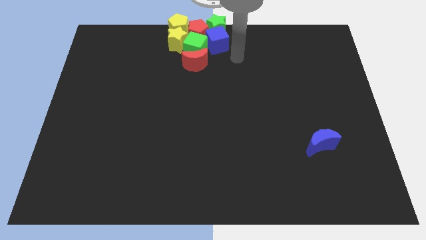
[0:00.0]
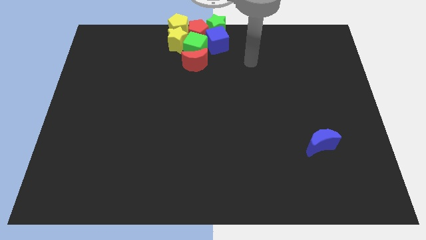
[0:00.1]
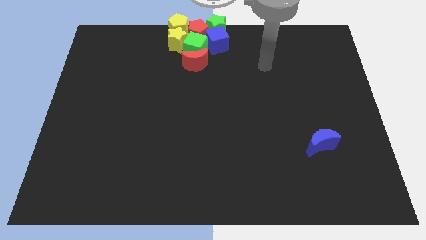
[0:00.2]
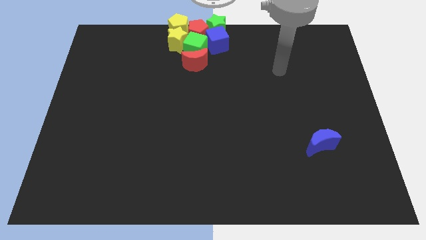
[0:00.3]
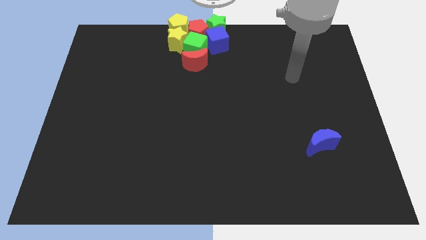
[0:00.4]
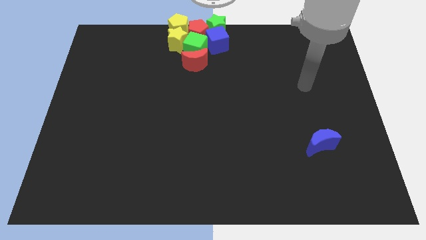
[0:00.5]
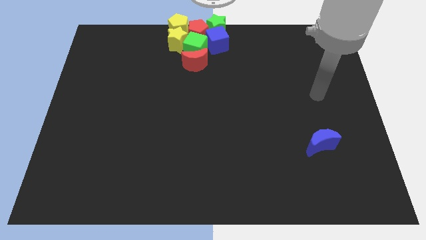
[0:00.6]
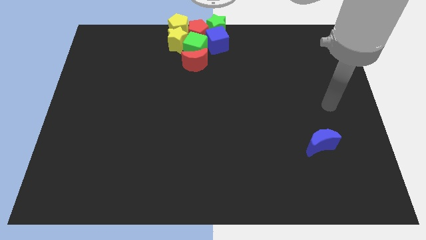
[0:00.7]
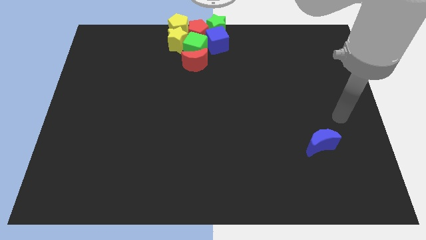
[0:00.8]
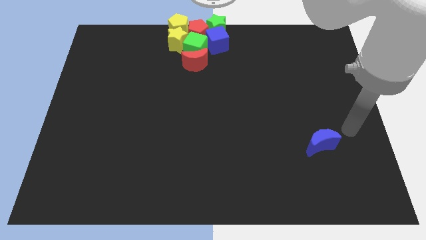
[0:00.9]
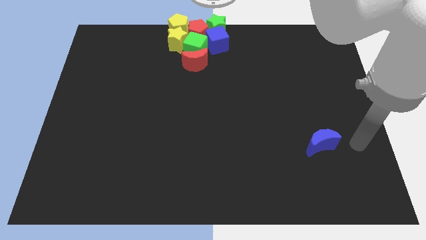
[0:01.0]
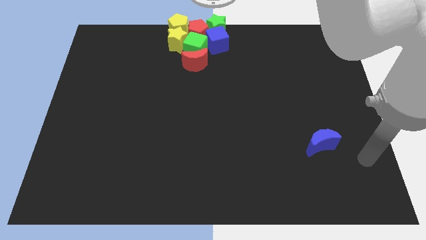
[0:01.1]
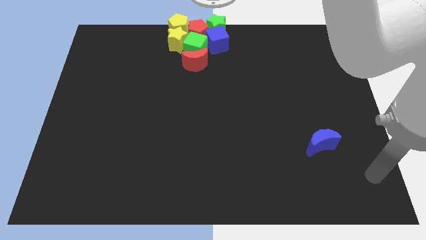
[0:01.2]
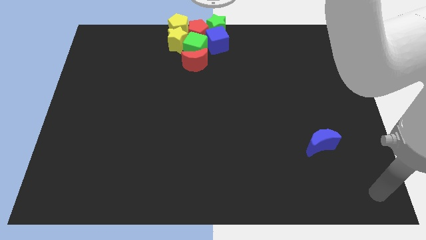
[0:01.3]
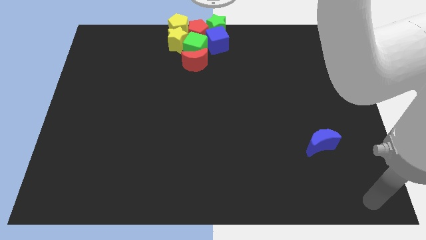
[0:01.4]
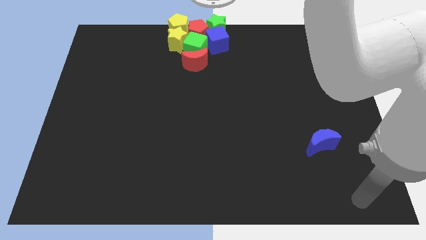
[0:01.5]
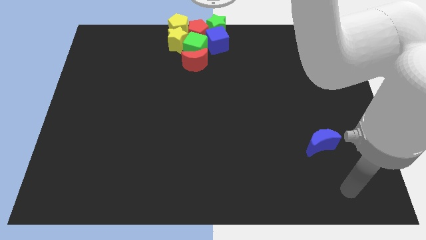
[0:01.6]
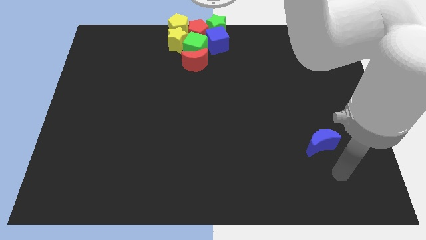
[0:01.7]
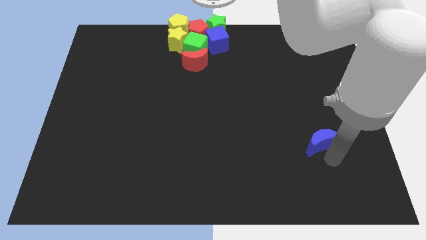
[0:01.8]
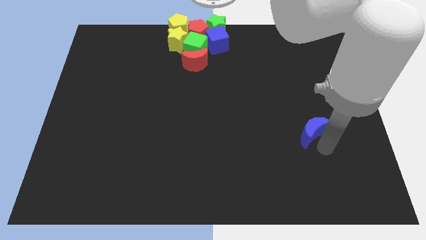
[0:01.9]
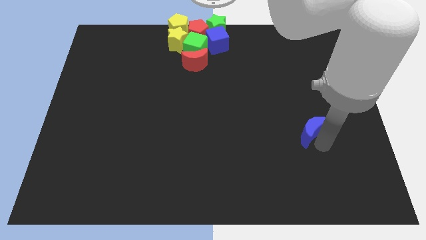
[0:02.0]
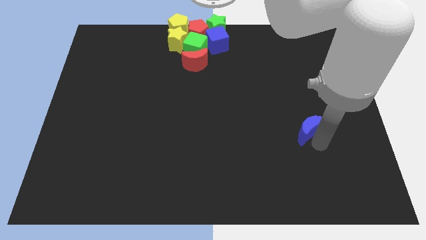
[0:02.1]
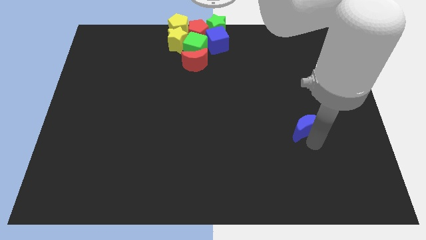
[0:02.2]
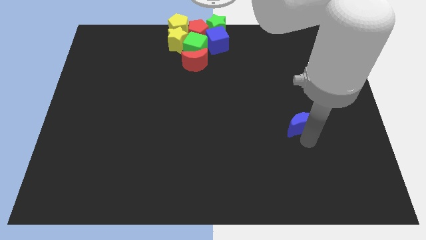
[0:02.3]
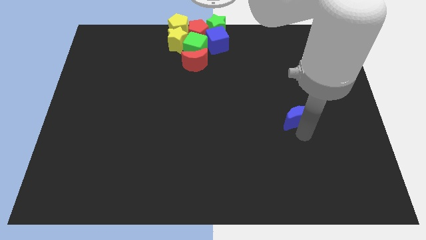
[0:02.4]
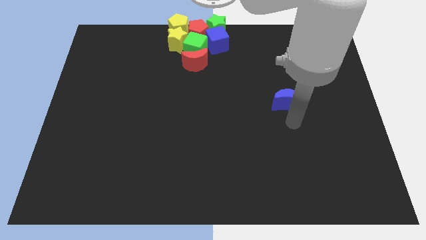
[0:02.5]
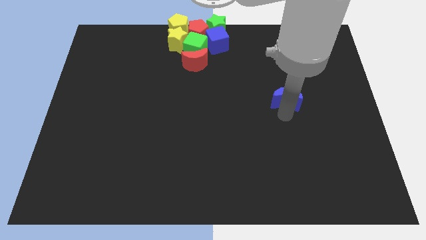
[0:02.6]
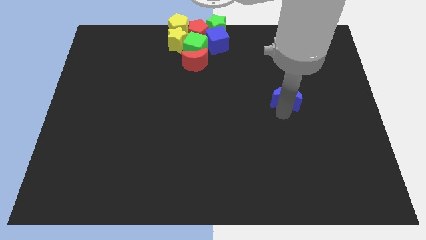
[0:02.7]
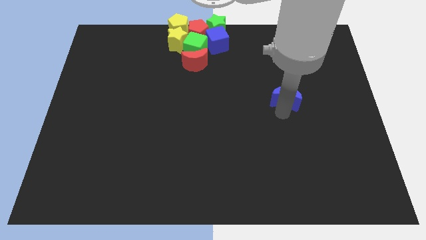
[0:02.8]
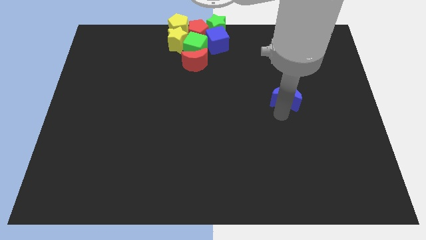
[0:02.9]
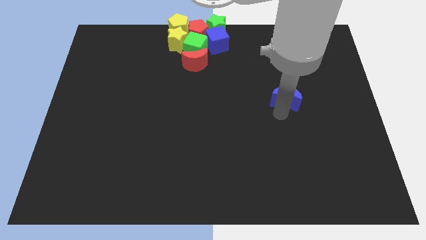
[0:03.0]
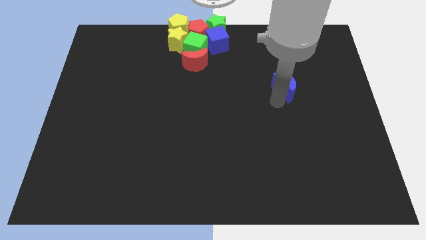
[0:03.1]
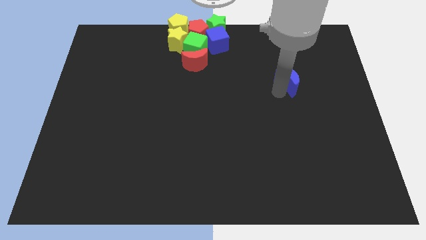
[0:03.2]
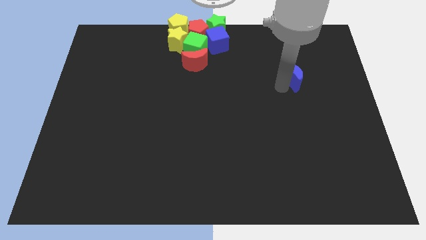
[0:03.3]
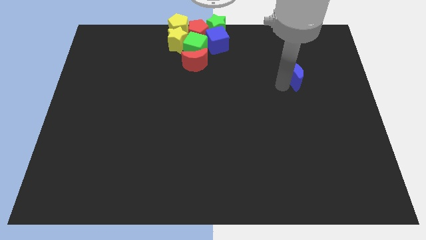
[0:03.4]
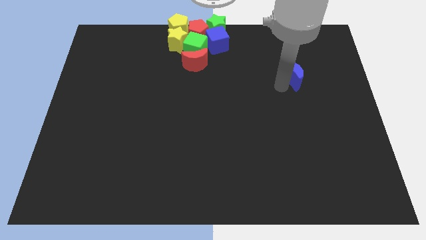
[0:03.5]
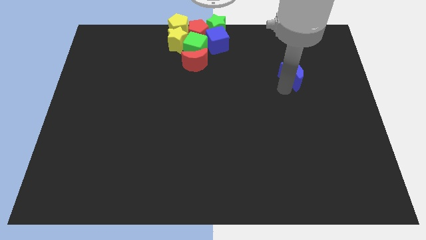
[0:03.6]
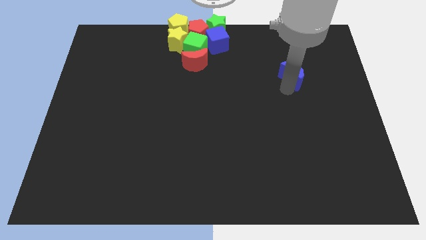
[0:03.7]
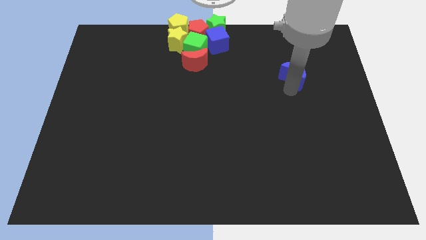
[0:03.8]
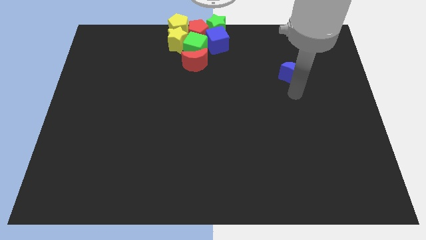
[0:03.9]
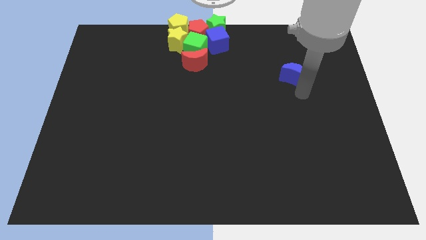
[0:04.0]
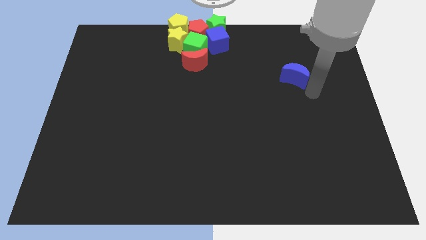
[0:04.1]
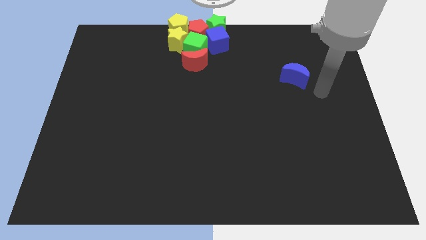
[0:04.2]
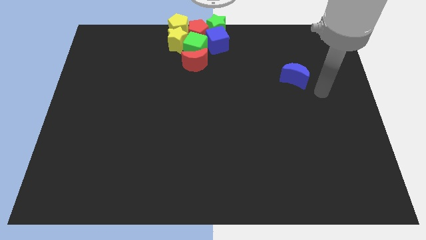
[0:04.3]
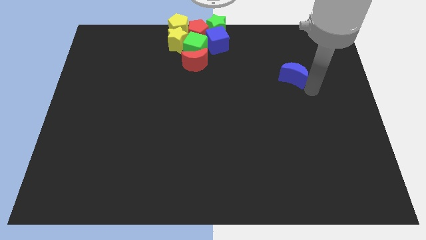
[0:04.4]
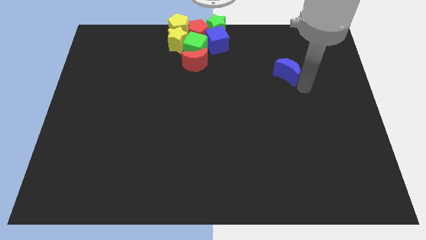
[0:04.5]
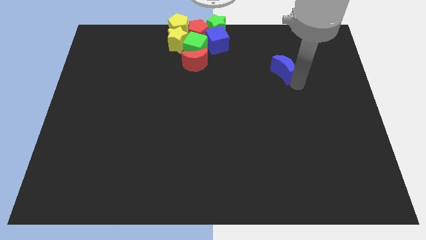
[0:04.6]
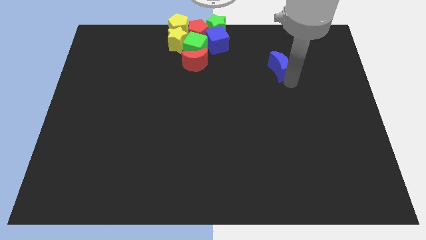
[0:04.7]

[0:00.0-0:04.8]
move the blue crescent towards the blue cube

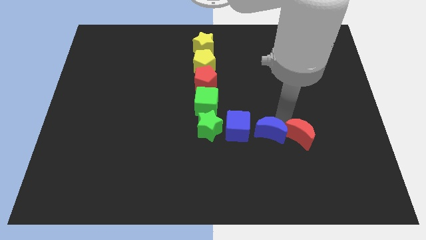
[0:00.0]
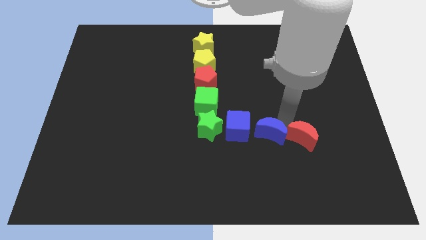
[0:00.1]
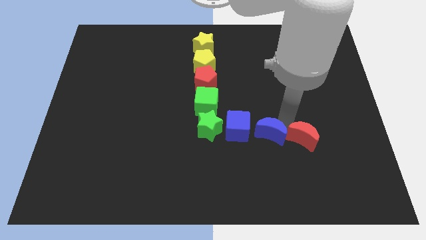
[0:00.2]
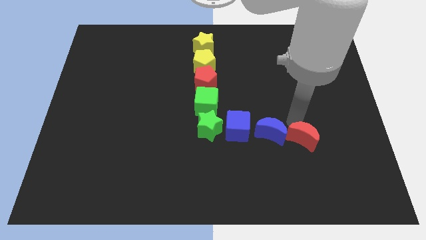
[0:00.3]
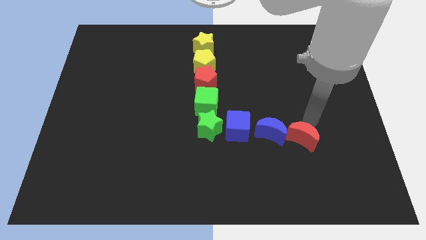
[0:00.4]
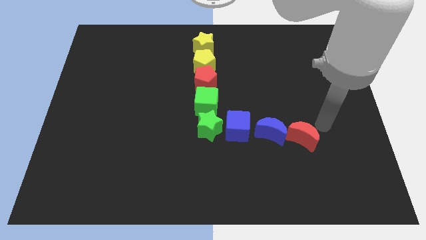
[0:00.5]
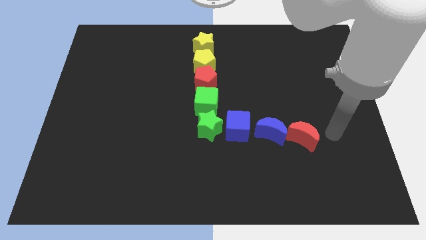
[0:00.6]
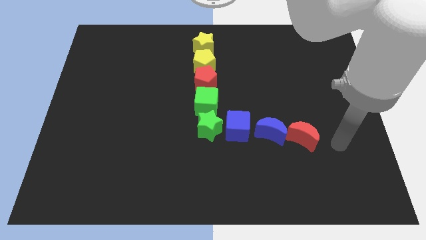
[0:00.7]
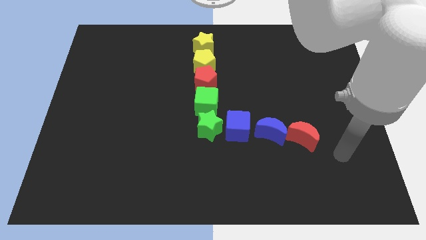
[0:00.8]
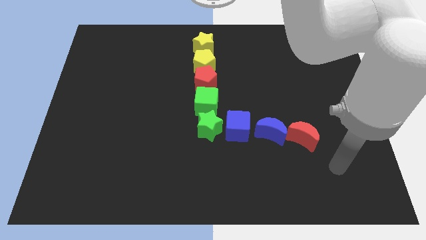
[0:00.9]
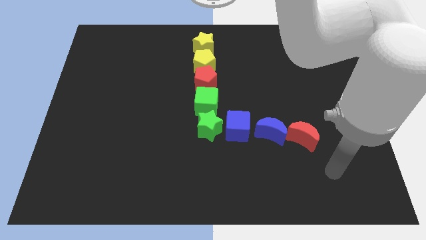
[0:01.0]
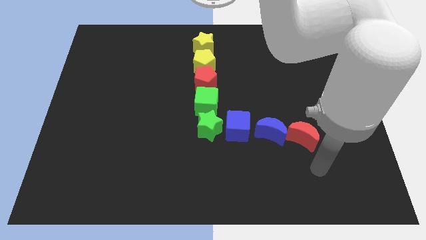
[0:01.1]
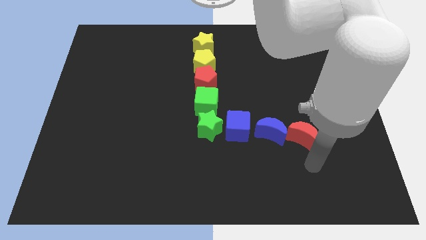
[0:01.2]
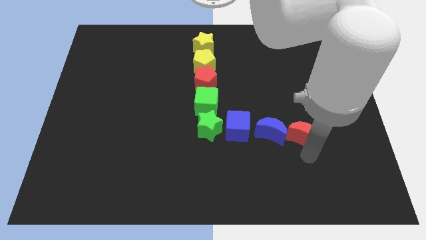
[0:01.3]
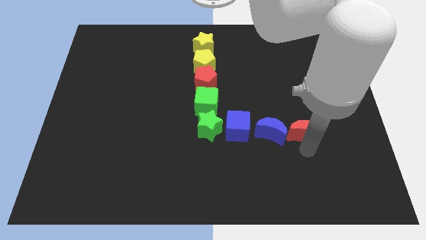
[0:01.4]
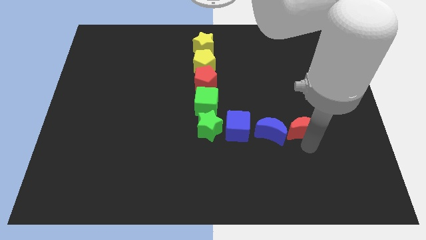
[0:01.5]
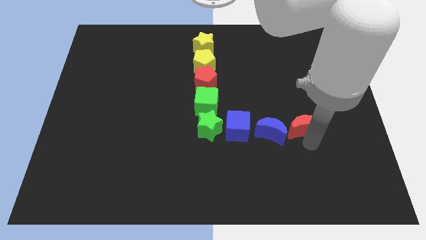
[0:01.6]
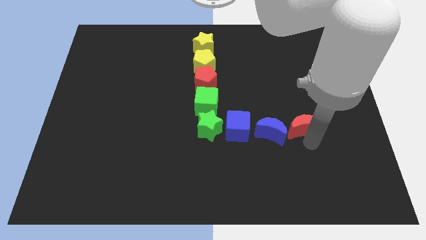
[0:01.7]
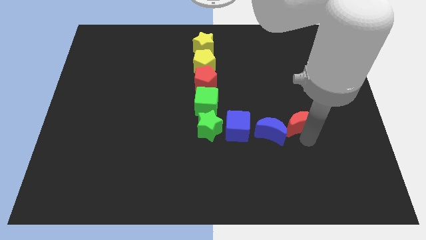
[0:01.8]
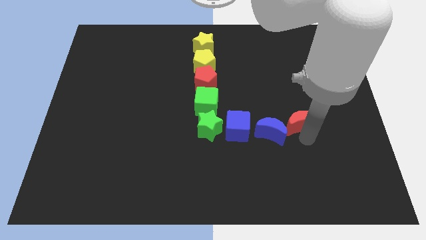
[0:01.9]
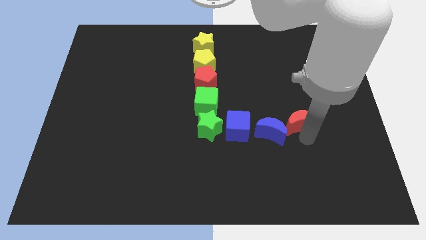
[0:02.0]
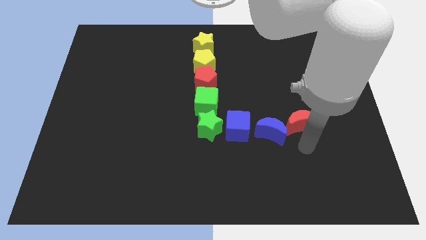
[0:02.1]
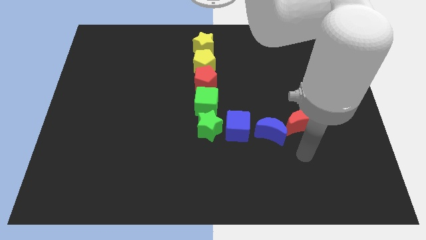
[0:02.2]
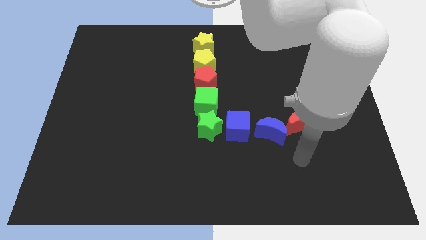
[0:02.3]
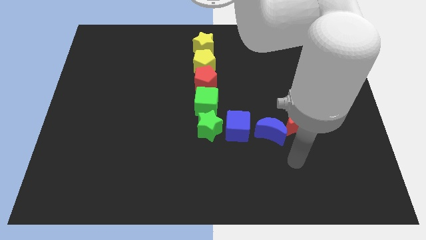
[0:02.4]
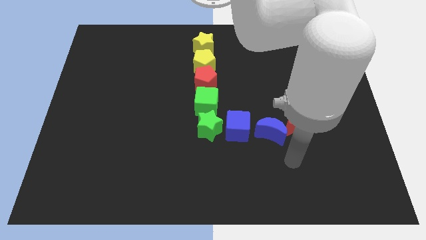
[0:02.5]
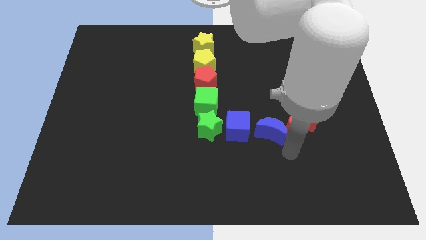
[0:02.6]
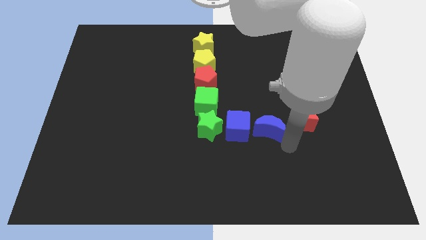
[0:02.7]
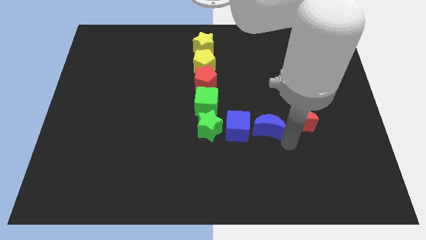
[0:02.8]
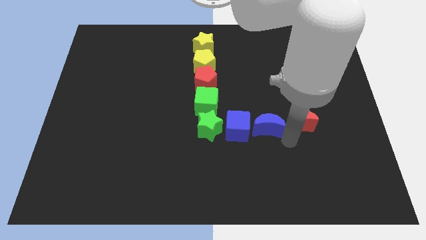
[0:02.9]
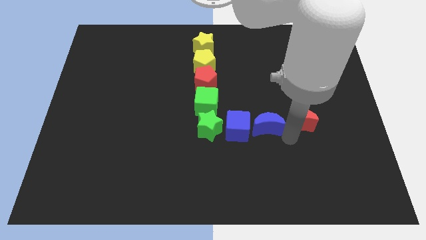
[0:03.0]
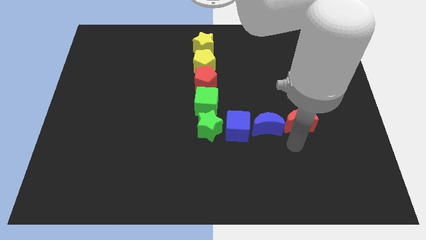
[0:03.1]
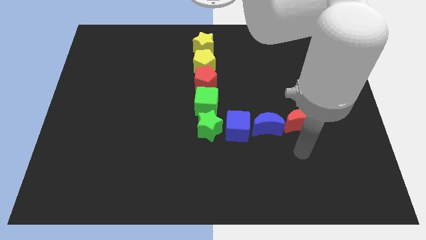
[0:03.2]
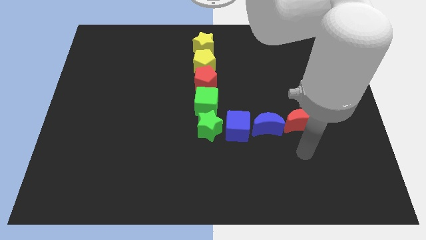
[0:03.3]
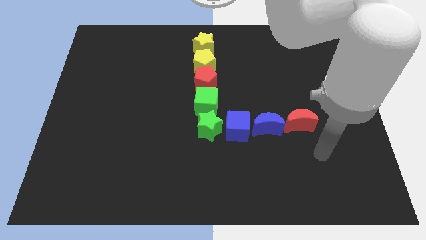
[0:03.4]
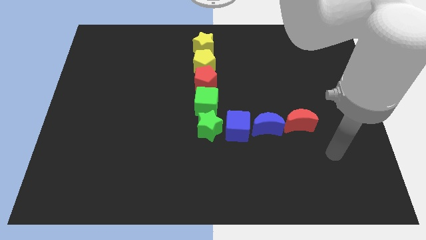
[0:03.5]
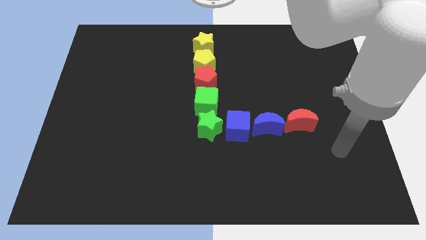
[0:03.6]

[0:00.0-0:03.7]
ajust red moon and the blue moon to form a horizontal line

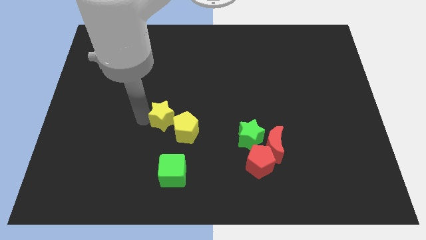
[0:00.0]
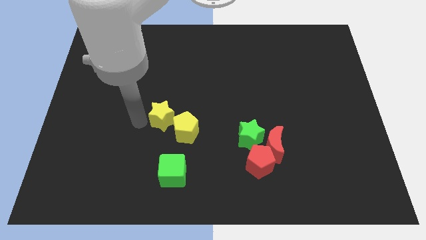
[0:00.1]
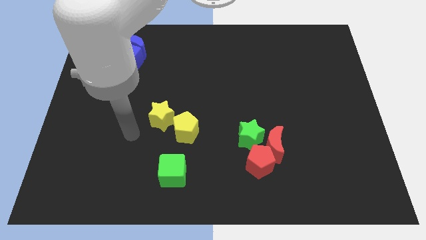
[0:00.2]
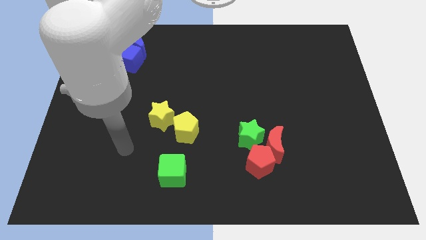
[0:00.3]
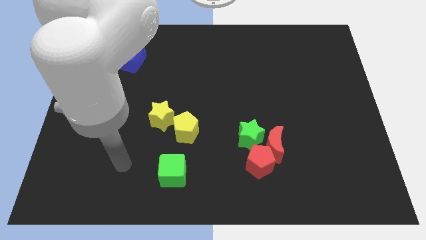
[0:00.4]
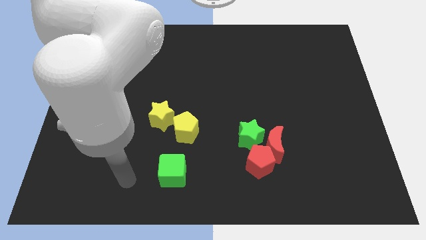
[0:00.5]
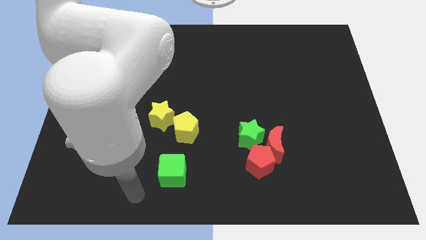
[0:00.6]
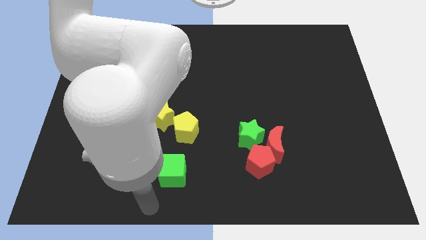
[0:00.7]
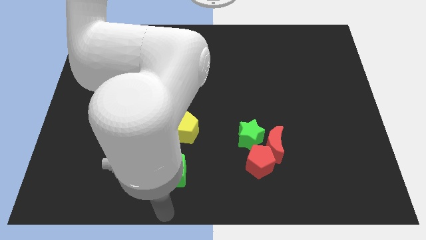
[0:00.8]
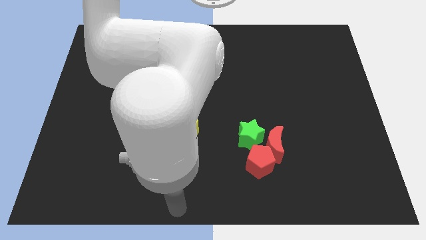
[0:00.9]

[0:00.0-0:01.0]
place your arm below the green cube
